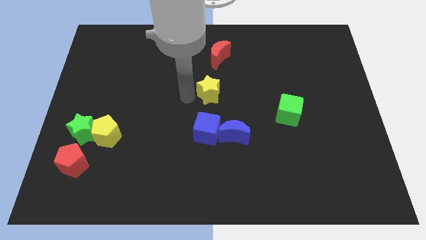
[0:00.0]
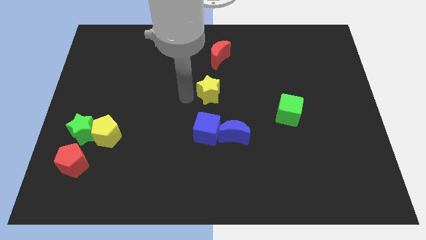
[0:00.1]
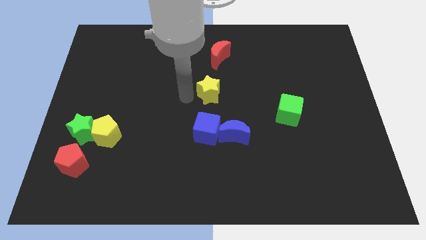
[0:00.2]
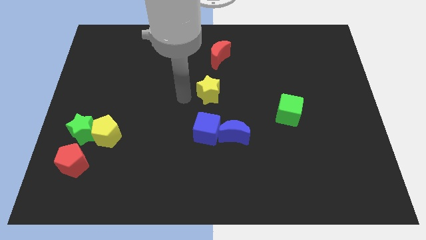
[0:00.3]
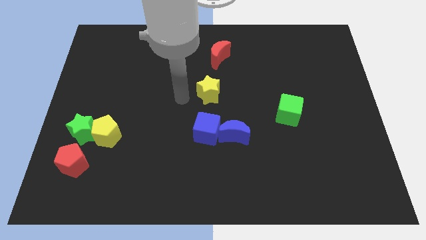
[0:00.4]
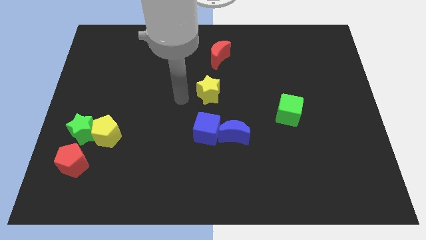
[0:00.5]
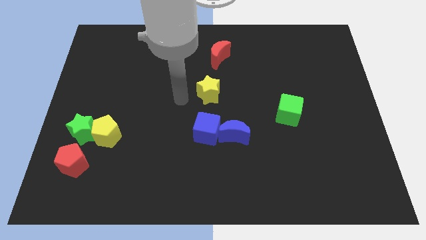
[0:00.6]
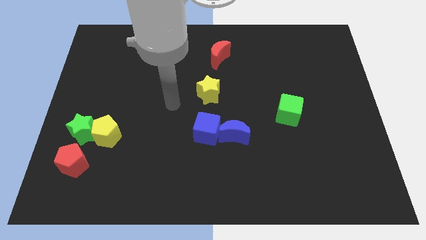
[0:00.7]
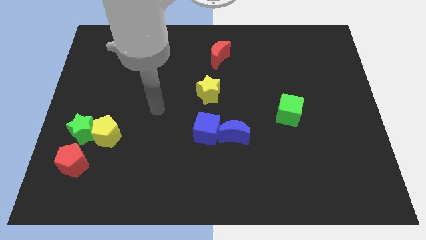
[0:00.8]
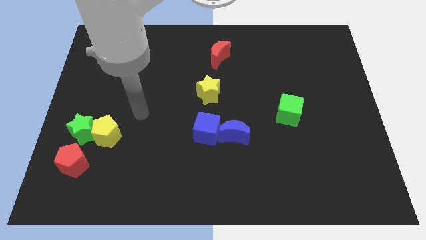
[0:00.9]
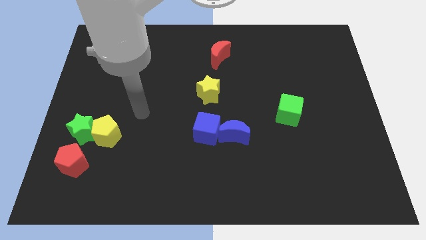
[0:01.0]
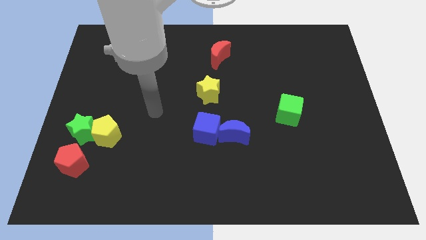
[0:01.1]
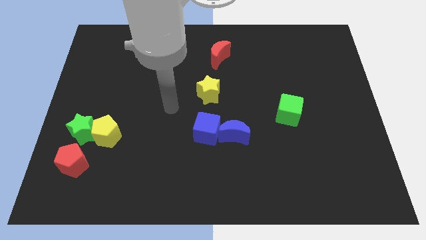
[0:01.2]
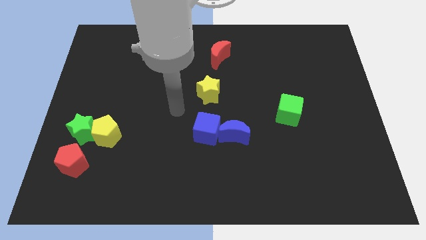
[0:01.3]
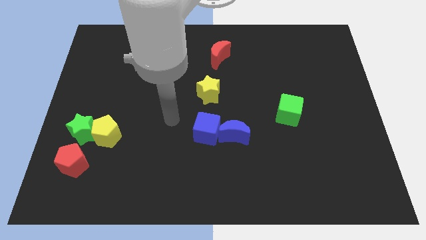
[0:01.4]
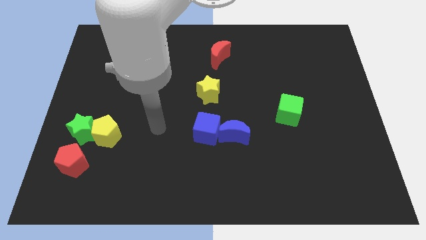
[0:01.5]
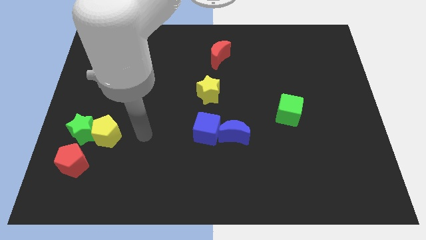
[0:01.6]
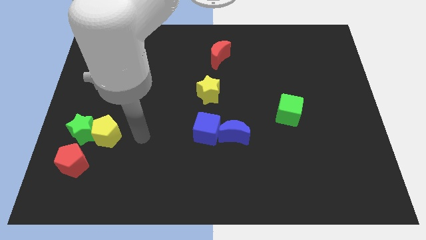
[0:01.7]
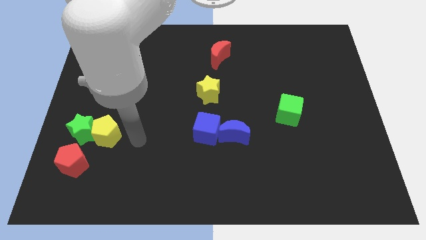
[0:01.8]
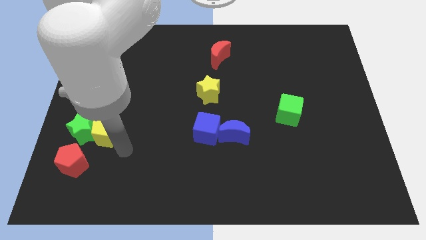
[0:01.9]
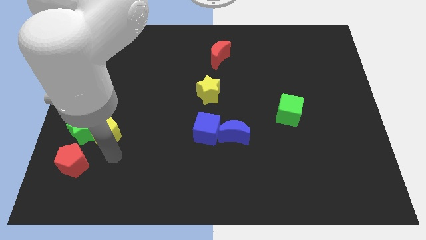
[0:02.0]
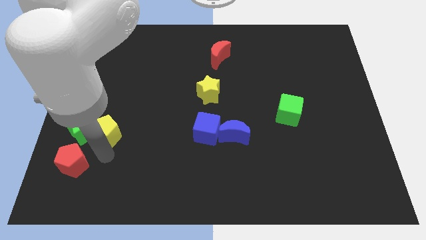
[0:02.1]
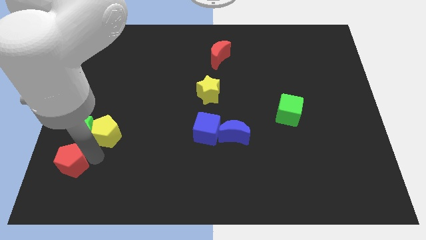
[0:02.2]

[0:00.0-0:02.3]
move your arm and point towards red pentagon

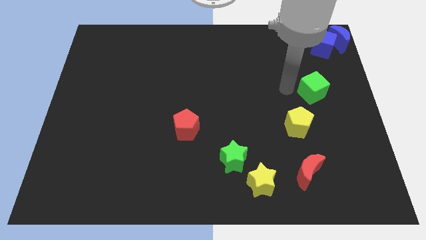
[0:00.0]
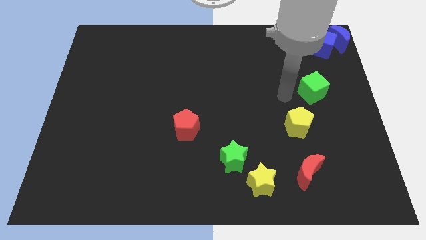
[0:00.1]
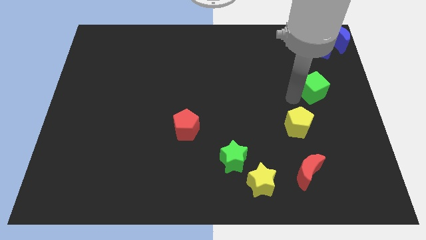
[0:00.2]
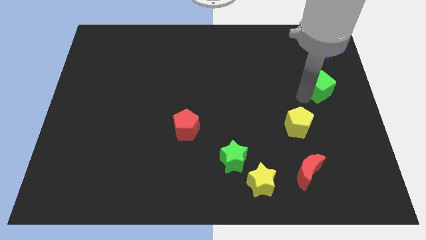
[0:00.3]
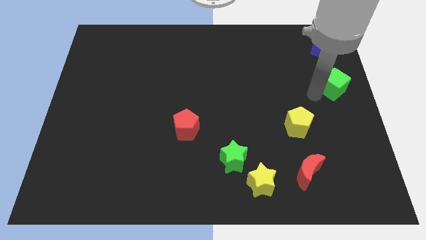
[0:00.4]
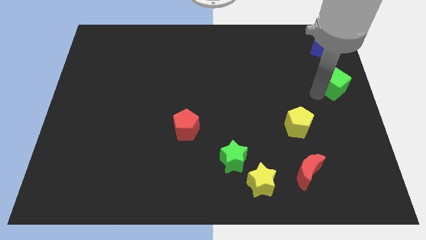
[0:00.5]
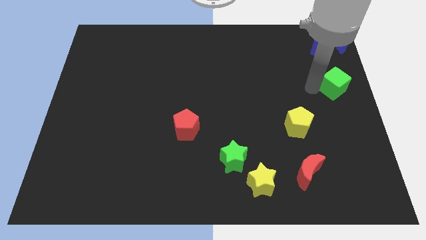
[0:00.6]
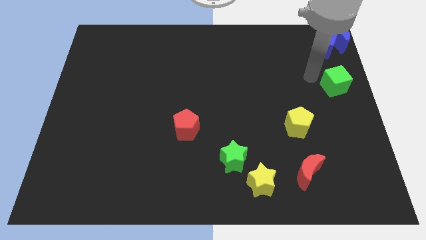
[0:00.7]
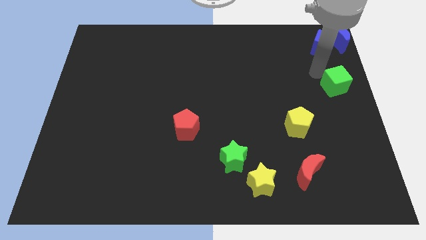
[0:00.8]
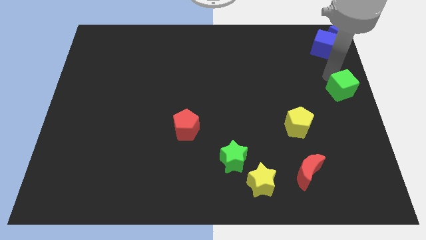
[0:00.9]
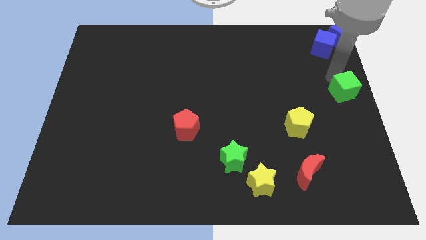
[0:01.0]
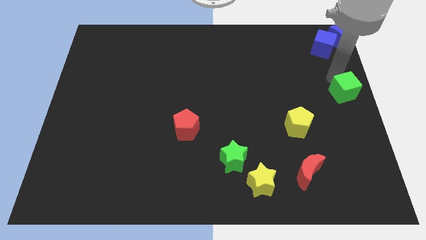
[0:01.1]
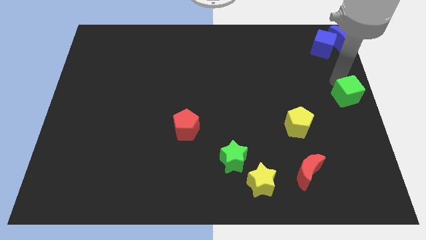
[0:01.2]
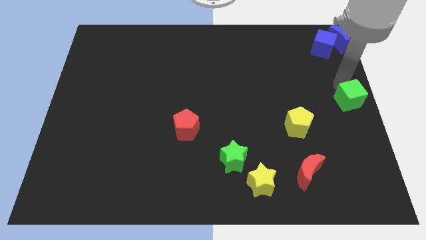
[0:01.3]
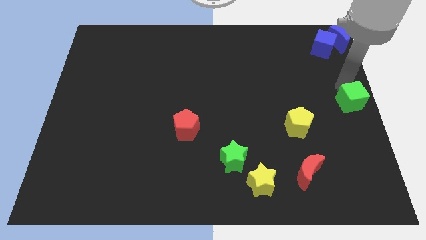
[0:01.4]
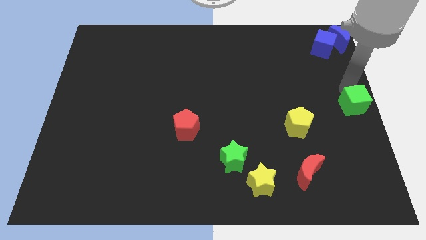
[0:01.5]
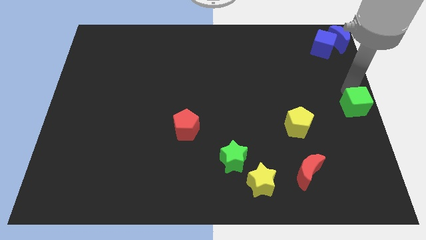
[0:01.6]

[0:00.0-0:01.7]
move the green cube to the center right of the board

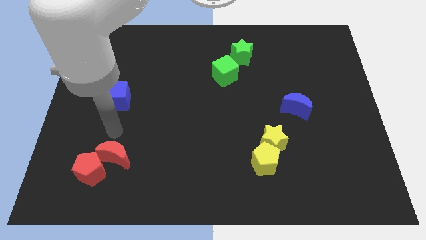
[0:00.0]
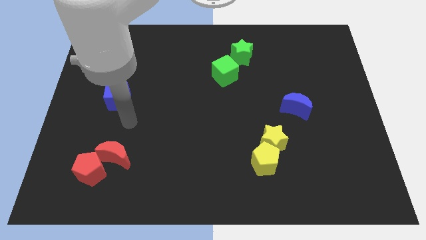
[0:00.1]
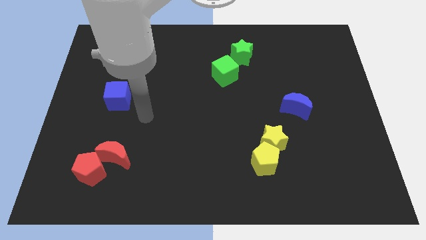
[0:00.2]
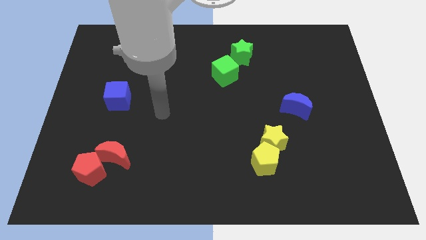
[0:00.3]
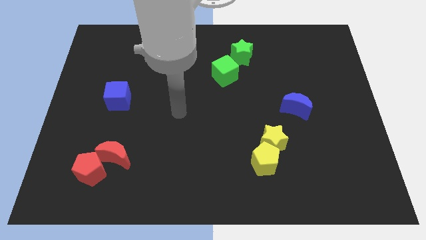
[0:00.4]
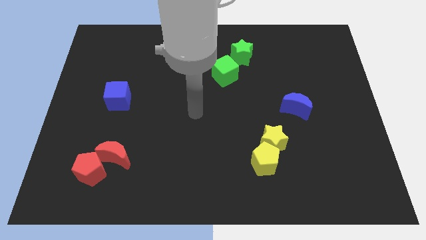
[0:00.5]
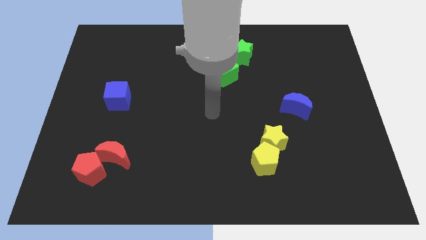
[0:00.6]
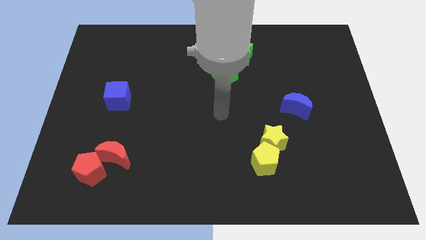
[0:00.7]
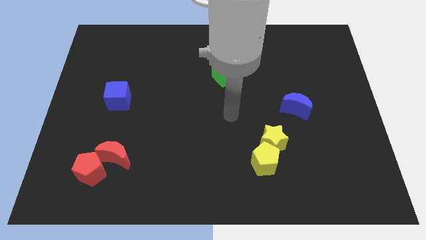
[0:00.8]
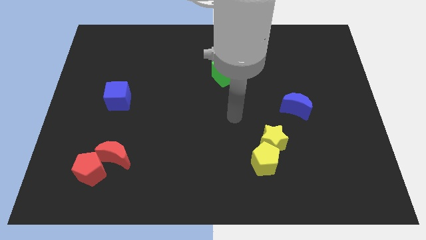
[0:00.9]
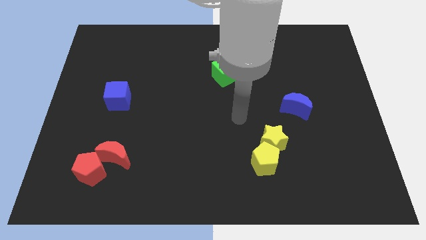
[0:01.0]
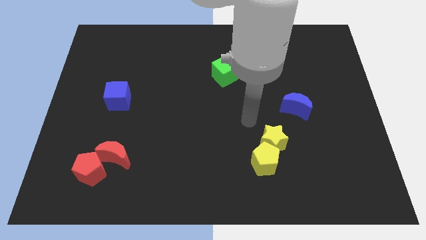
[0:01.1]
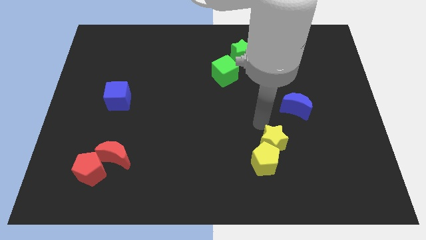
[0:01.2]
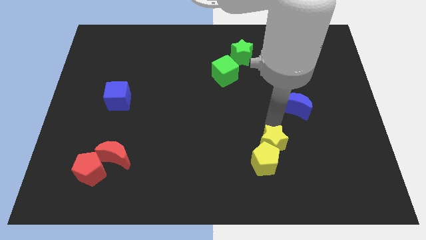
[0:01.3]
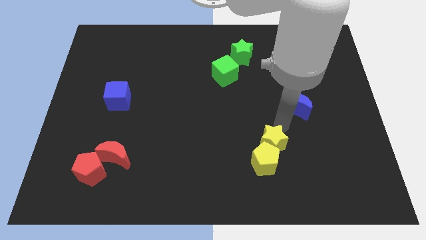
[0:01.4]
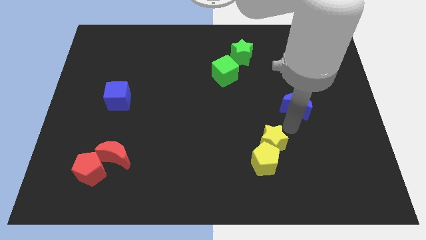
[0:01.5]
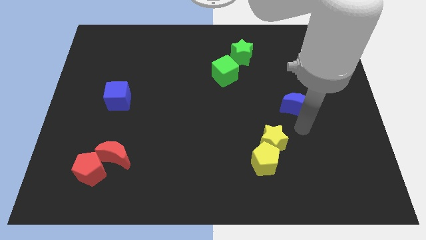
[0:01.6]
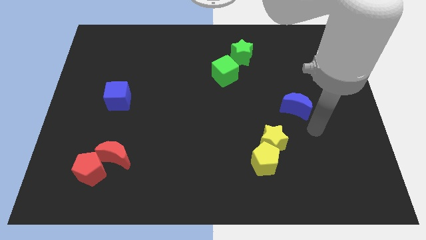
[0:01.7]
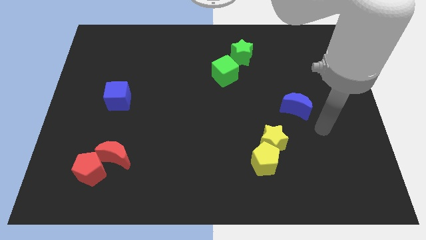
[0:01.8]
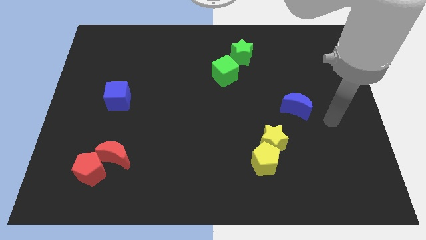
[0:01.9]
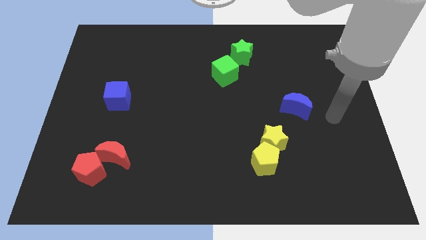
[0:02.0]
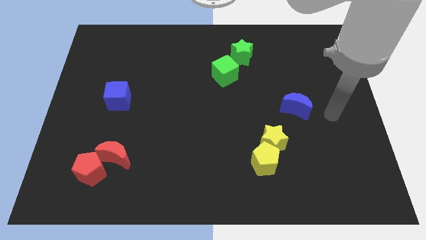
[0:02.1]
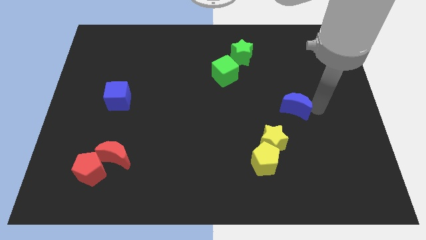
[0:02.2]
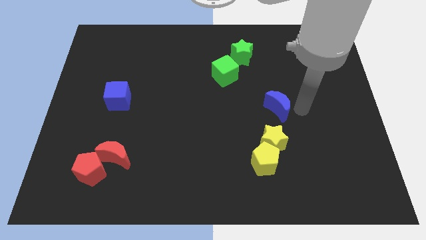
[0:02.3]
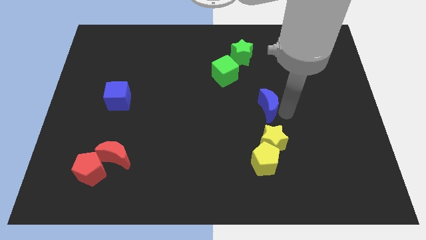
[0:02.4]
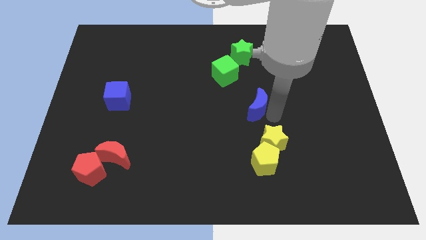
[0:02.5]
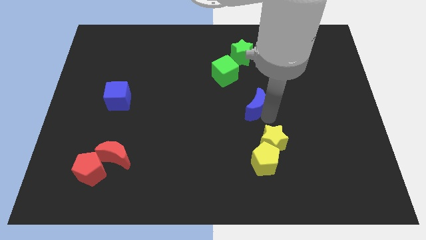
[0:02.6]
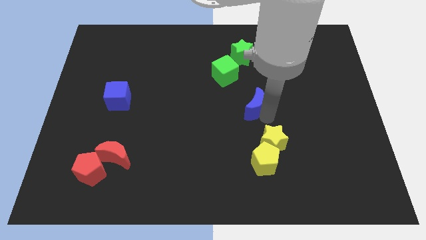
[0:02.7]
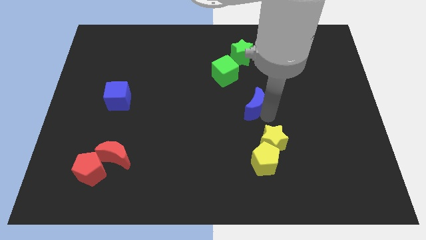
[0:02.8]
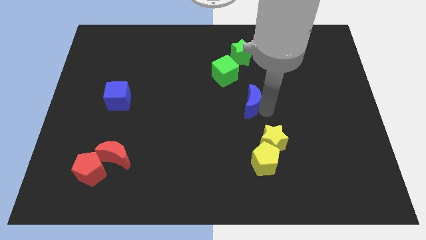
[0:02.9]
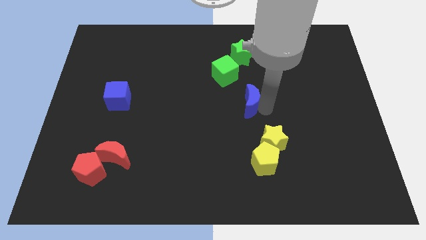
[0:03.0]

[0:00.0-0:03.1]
push blue crescent in between green cube and yellow star

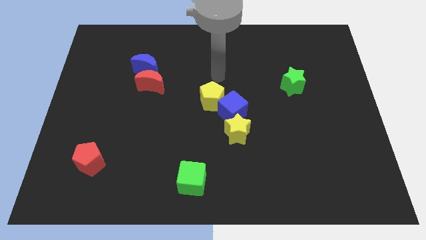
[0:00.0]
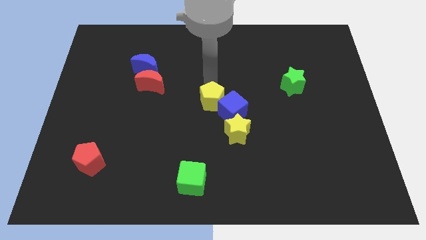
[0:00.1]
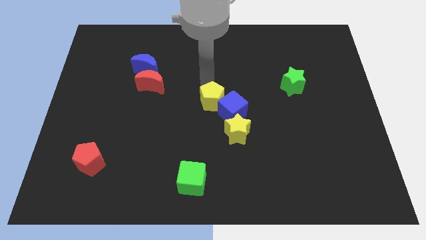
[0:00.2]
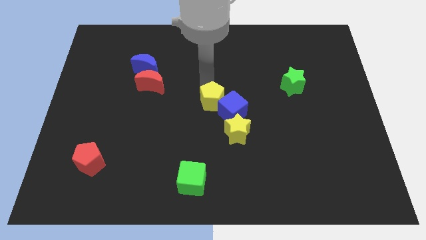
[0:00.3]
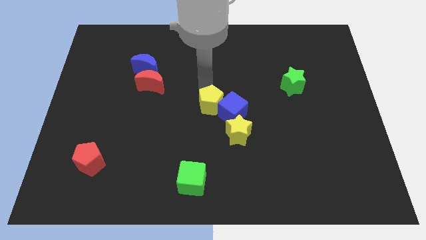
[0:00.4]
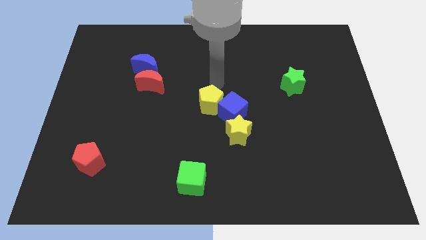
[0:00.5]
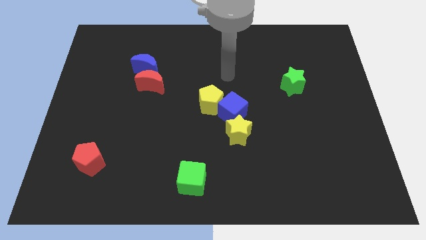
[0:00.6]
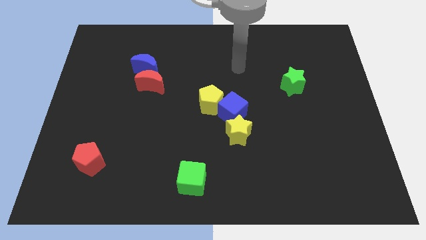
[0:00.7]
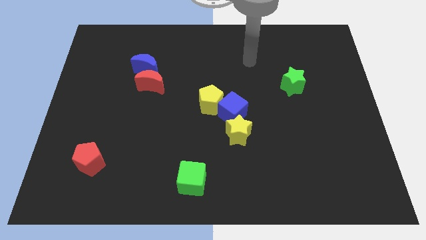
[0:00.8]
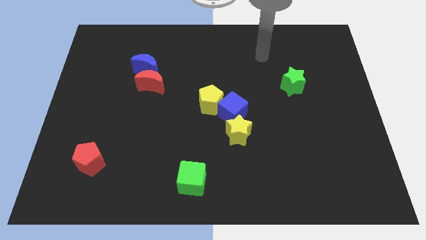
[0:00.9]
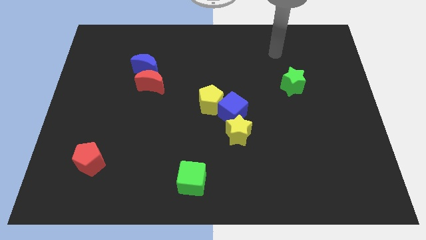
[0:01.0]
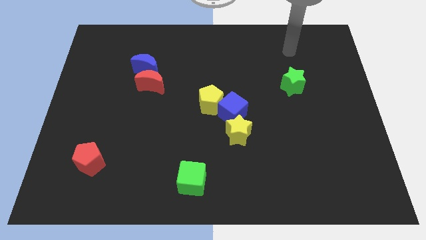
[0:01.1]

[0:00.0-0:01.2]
tap the yellow pentagon on top

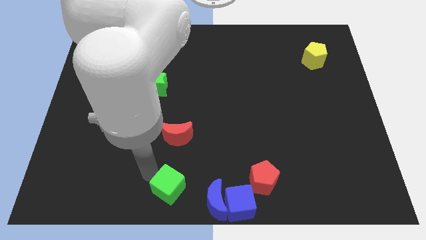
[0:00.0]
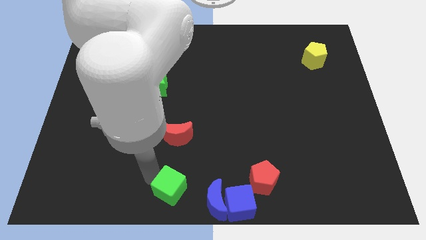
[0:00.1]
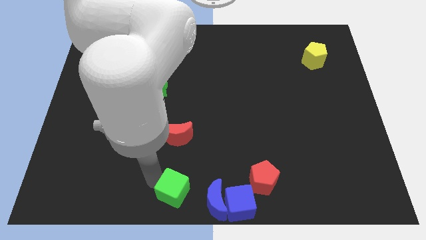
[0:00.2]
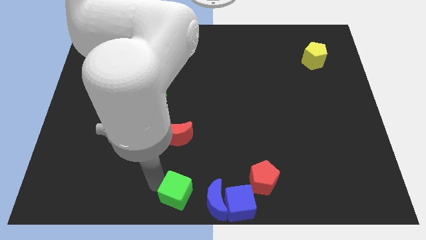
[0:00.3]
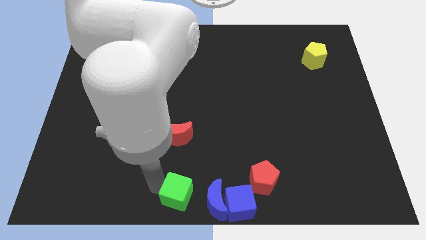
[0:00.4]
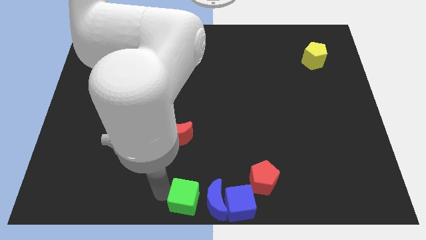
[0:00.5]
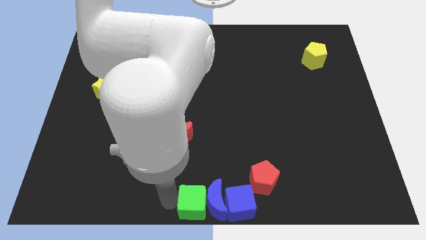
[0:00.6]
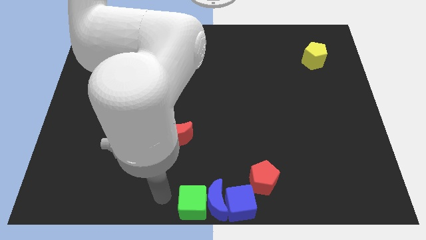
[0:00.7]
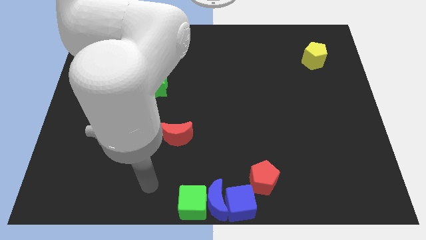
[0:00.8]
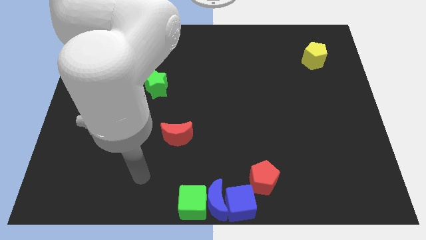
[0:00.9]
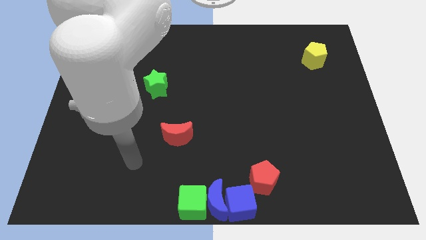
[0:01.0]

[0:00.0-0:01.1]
push the green cube to the left of the blue crescent
